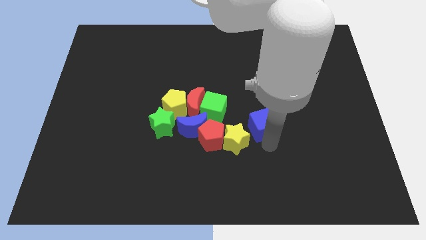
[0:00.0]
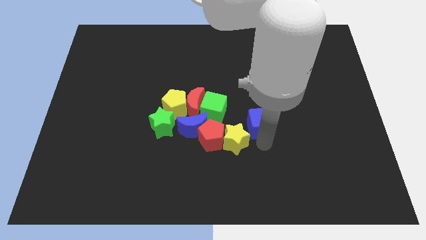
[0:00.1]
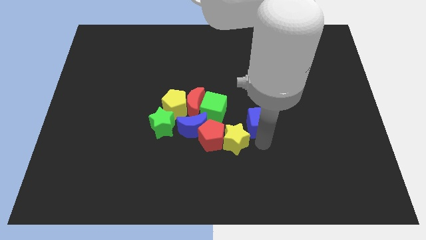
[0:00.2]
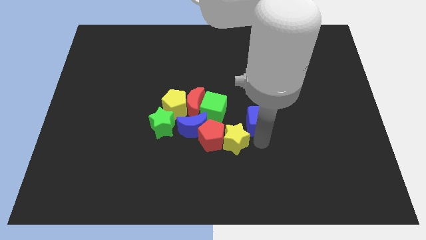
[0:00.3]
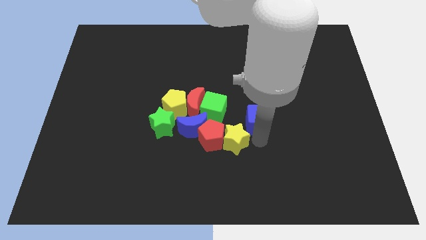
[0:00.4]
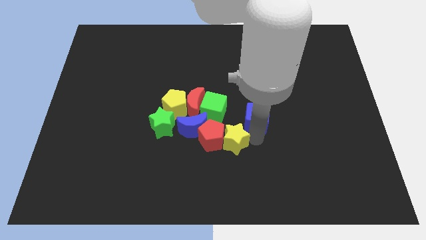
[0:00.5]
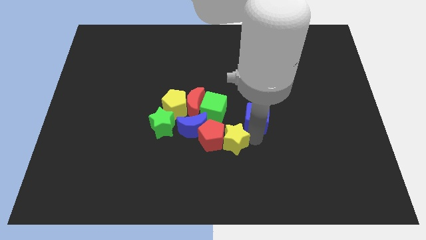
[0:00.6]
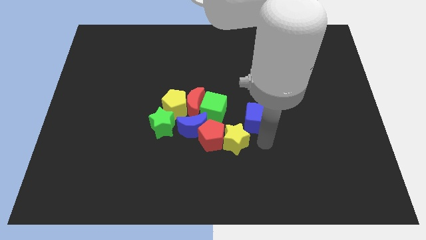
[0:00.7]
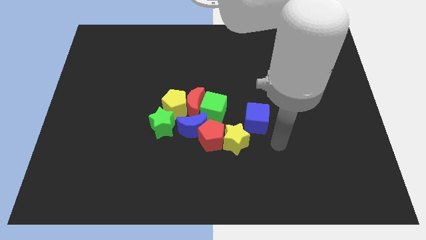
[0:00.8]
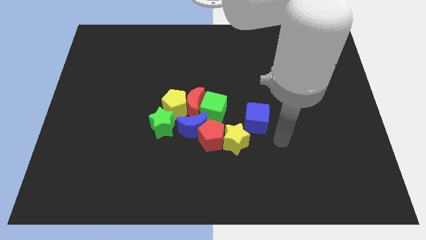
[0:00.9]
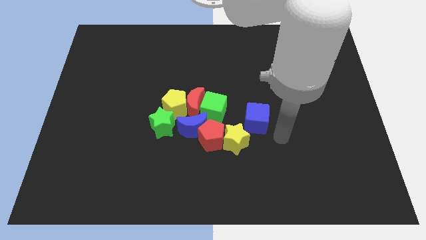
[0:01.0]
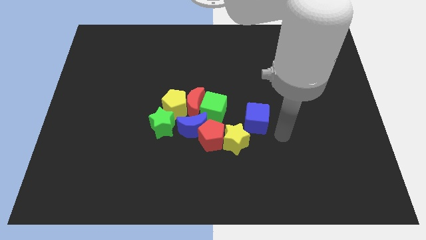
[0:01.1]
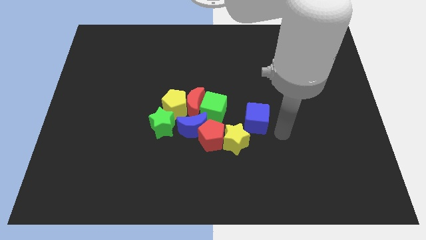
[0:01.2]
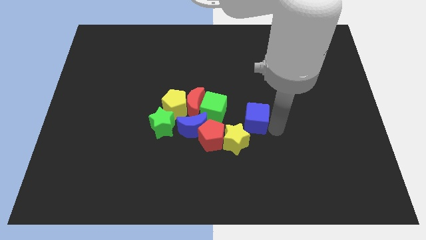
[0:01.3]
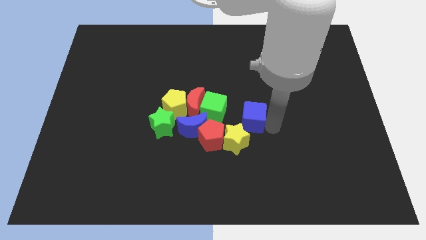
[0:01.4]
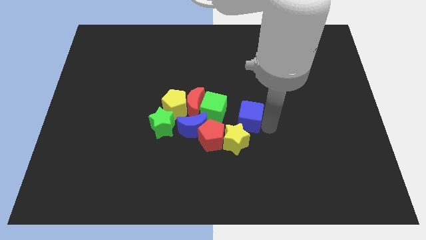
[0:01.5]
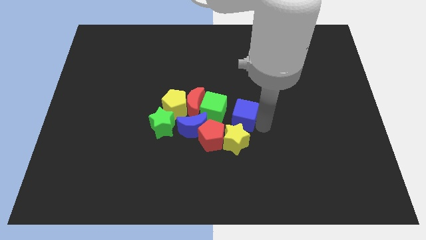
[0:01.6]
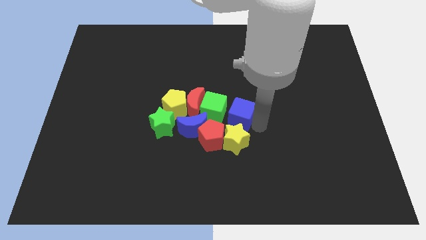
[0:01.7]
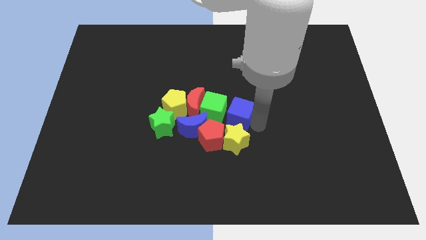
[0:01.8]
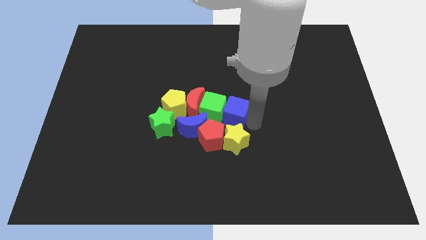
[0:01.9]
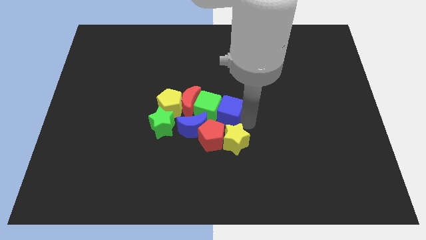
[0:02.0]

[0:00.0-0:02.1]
put the blue cube to the right side of the green cube

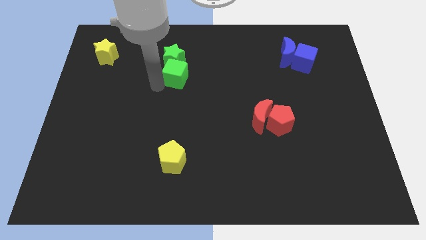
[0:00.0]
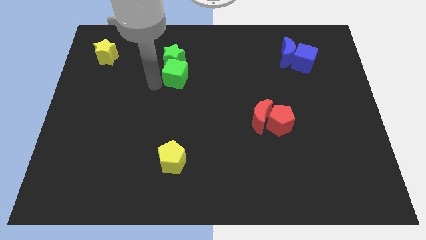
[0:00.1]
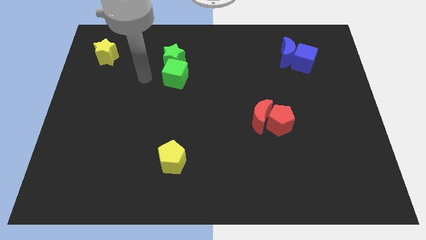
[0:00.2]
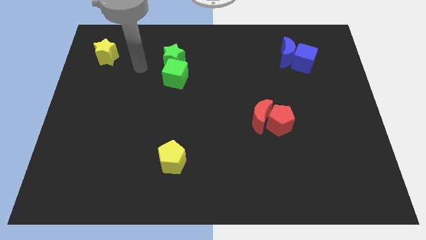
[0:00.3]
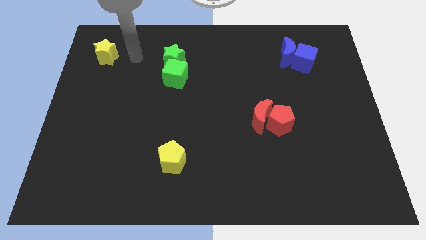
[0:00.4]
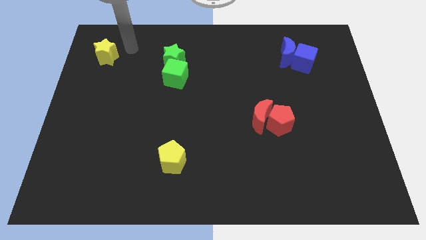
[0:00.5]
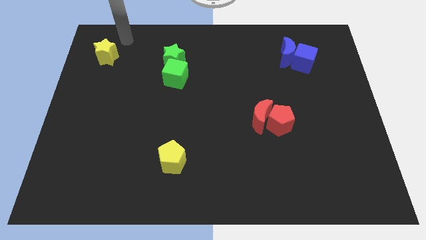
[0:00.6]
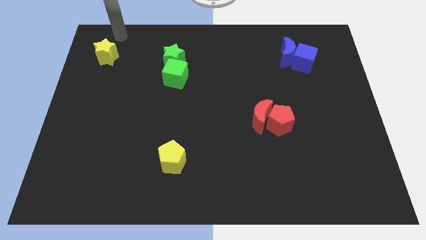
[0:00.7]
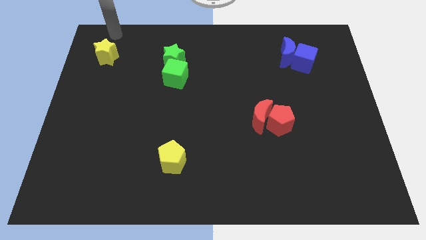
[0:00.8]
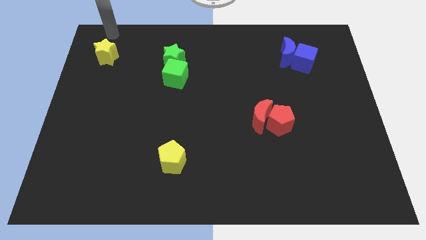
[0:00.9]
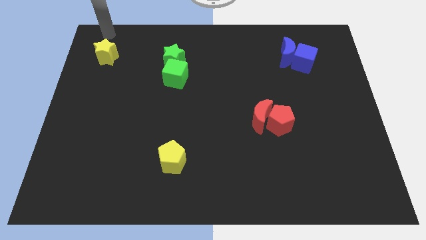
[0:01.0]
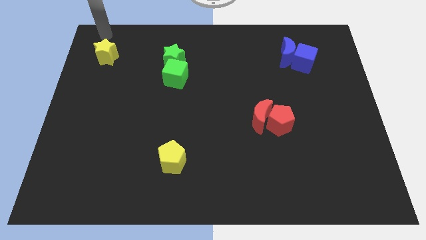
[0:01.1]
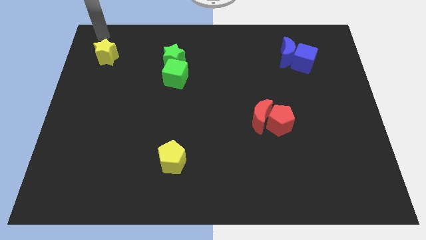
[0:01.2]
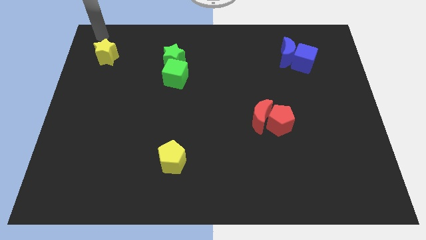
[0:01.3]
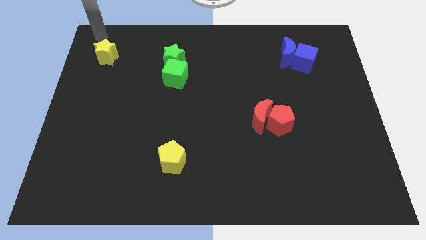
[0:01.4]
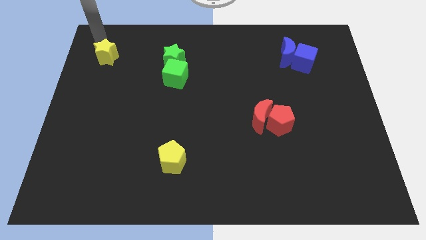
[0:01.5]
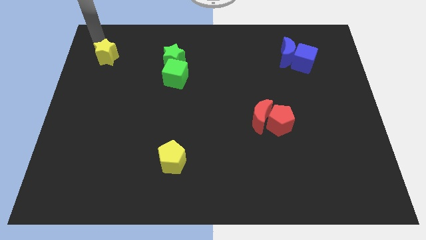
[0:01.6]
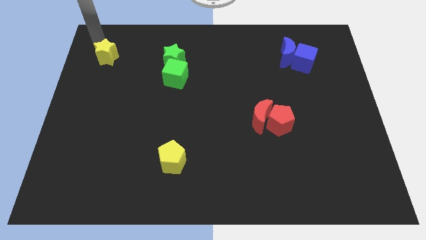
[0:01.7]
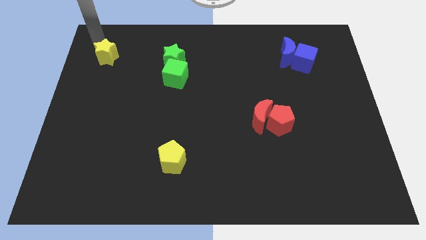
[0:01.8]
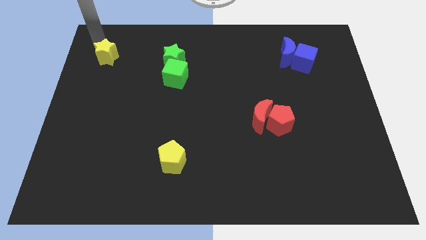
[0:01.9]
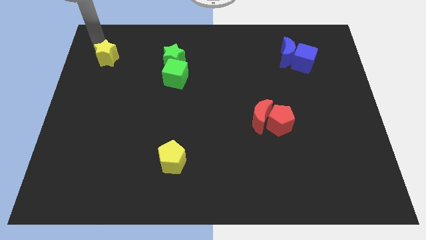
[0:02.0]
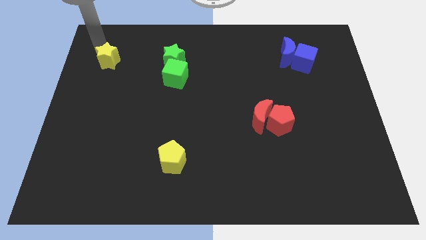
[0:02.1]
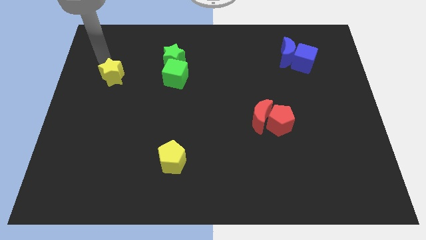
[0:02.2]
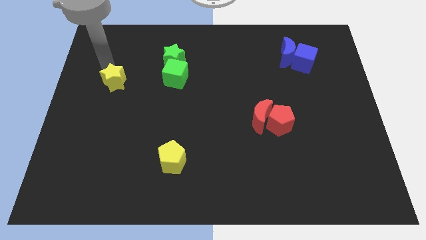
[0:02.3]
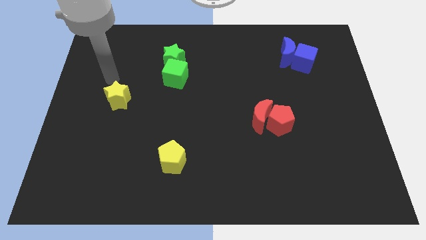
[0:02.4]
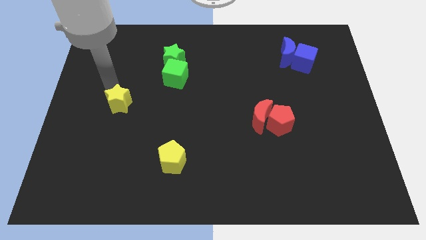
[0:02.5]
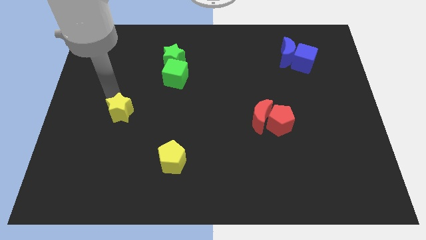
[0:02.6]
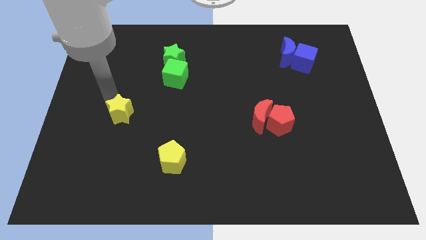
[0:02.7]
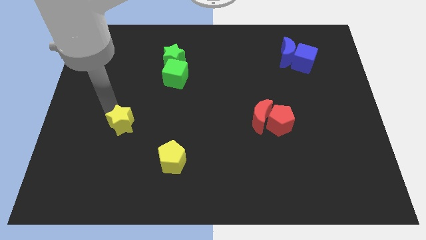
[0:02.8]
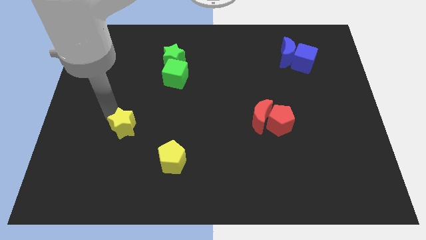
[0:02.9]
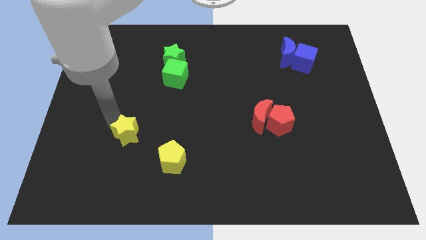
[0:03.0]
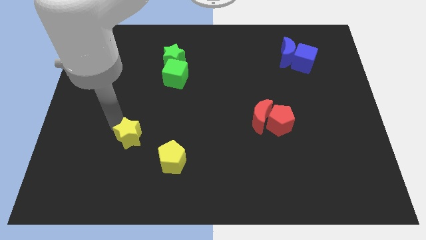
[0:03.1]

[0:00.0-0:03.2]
place the yellow star above the yellow pentagon

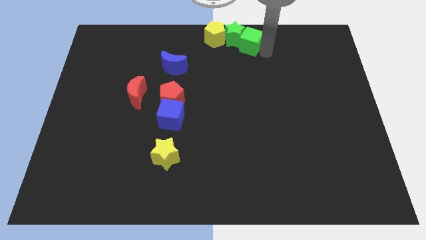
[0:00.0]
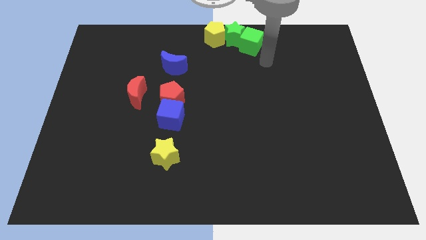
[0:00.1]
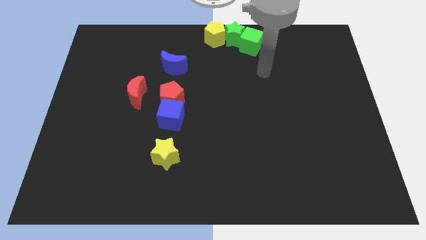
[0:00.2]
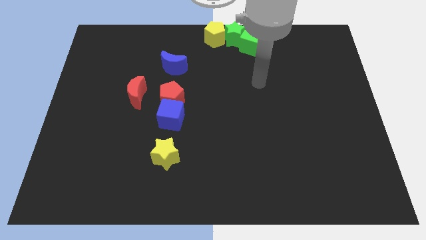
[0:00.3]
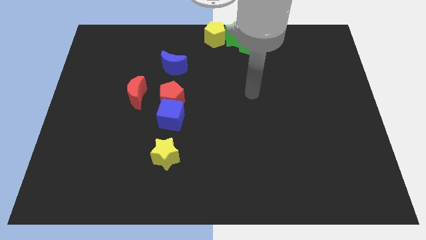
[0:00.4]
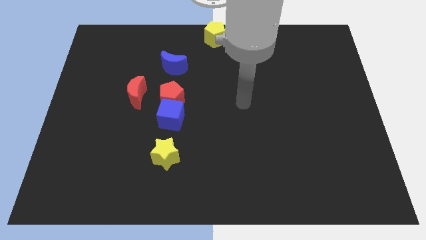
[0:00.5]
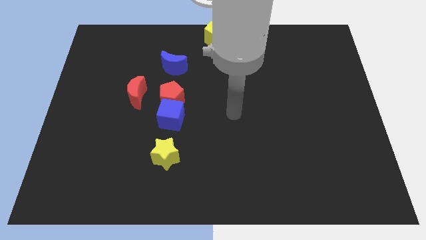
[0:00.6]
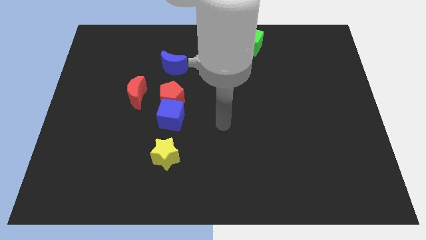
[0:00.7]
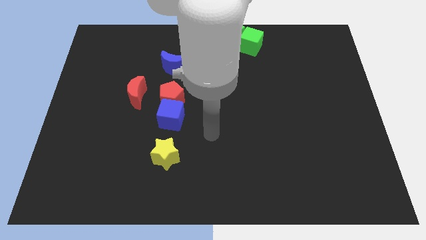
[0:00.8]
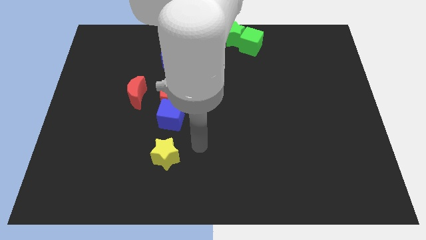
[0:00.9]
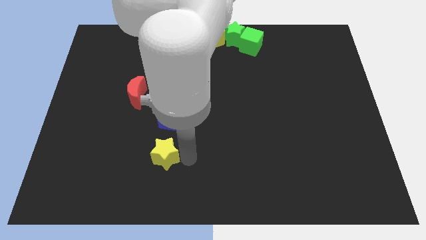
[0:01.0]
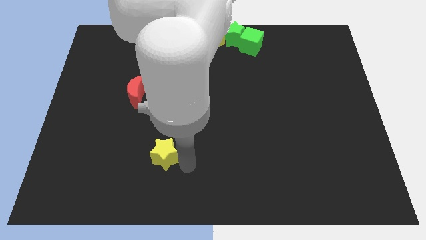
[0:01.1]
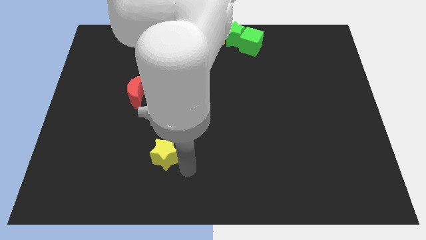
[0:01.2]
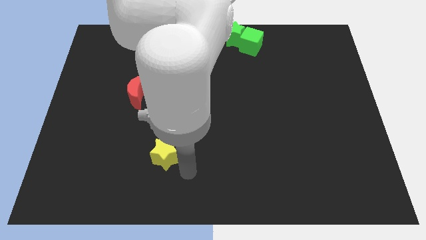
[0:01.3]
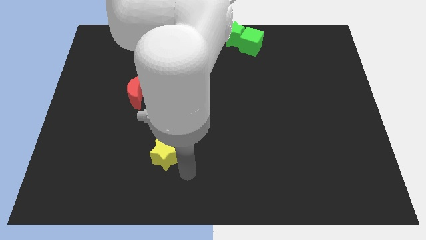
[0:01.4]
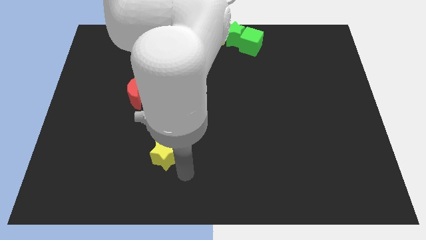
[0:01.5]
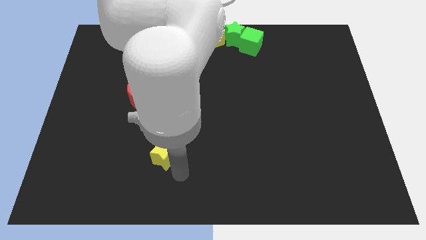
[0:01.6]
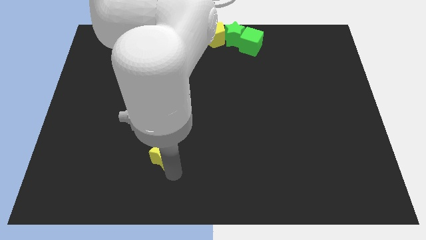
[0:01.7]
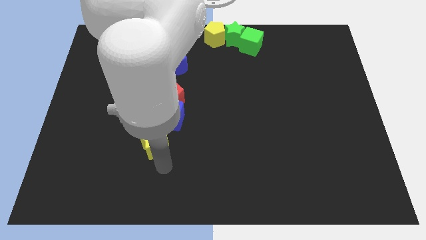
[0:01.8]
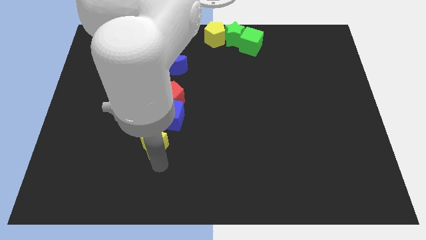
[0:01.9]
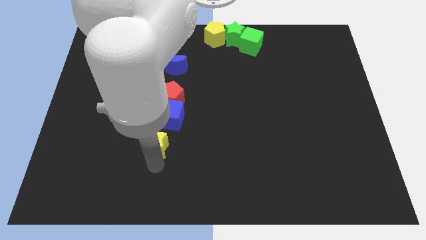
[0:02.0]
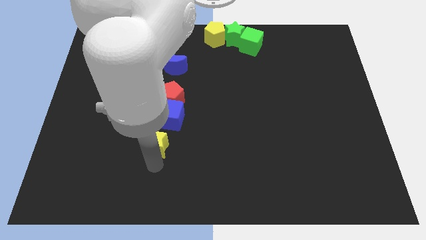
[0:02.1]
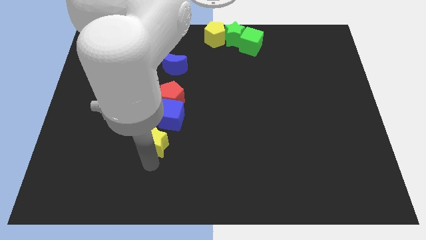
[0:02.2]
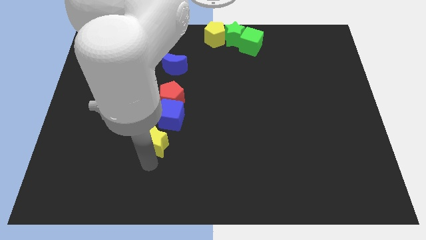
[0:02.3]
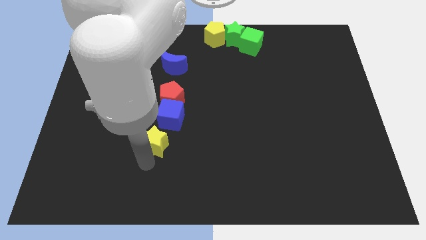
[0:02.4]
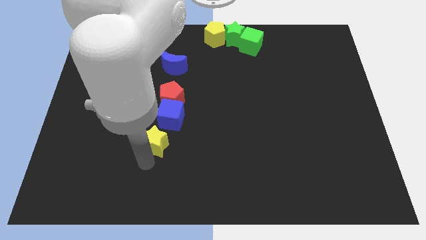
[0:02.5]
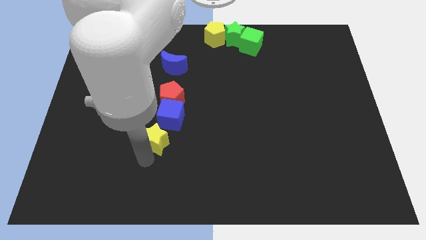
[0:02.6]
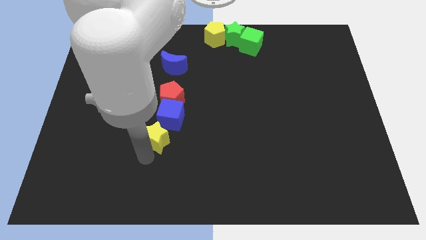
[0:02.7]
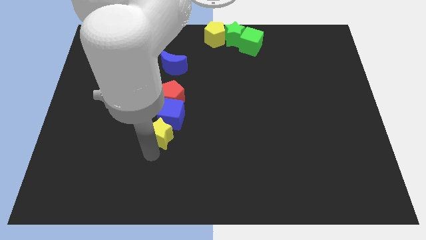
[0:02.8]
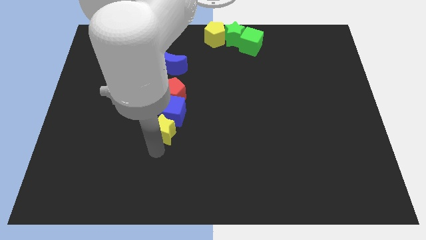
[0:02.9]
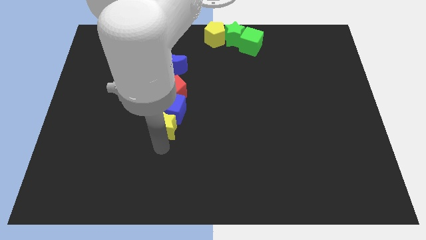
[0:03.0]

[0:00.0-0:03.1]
push the yellow star towards the blue cube

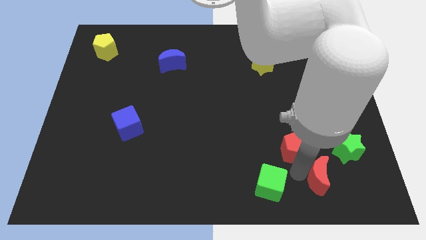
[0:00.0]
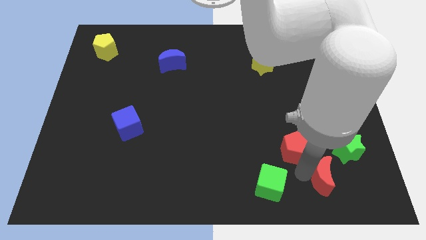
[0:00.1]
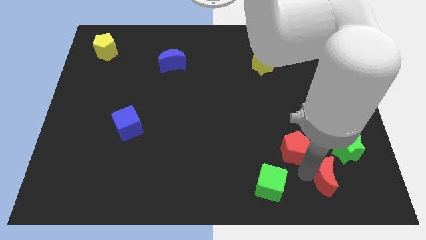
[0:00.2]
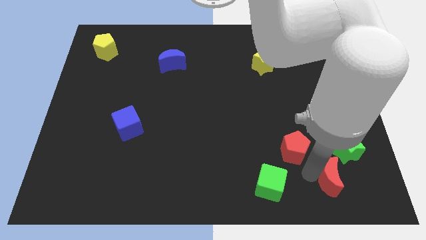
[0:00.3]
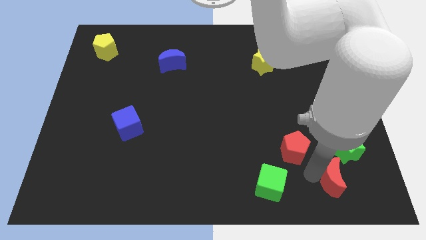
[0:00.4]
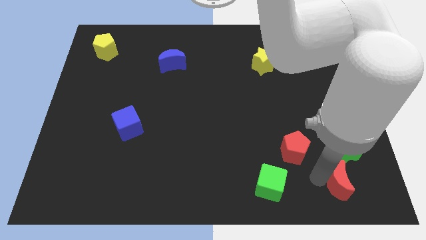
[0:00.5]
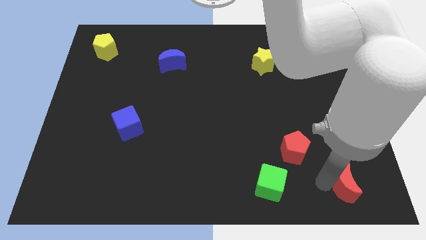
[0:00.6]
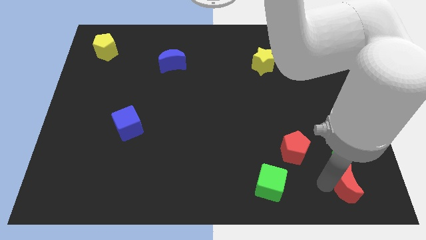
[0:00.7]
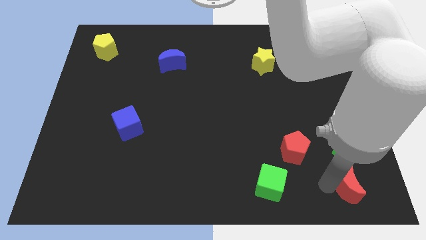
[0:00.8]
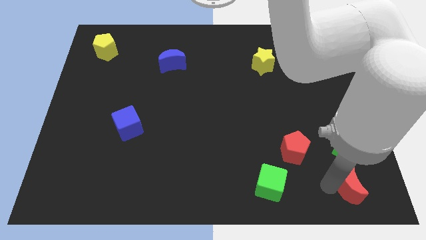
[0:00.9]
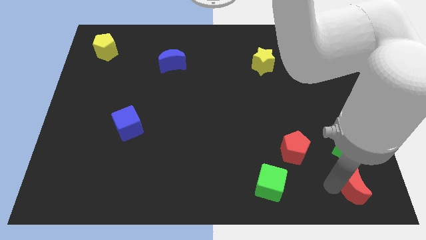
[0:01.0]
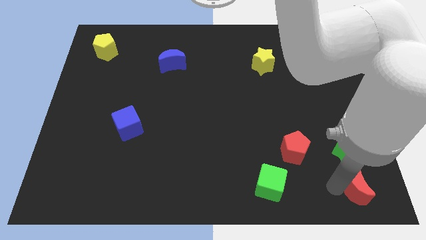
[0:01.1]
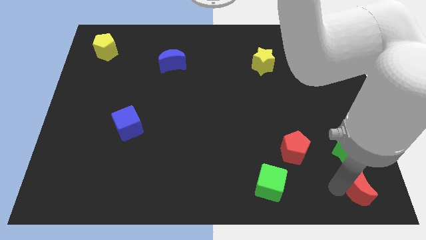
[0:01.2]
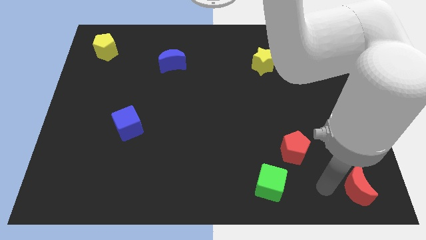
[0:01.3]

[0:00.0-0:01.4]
separate red moon from red pentagon
